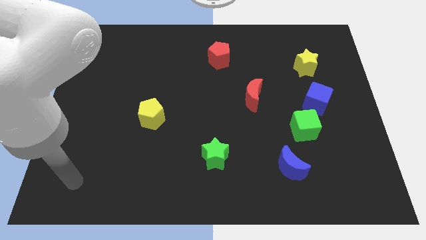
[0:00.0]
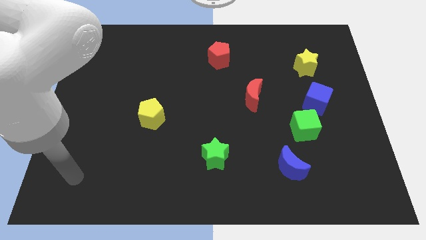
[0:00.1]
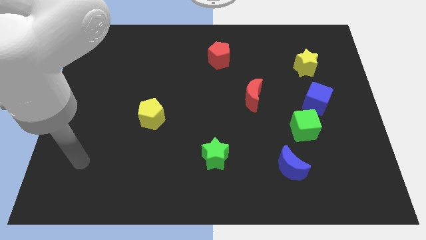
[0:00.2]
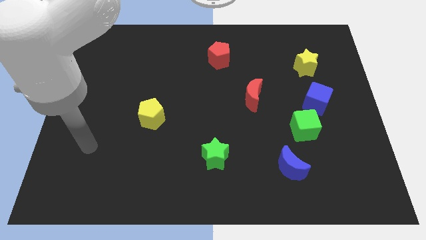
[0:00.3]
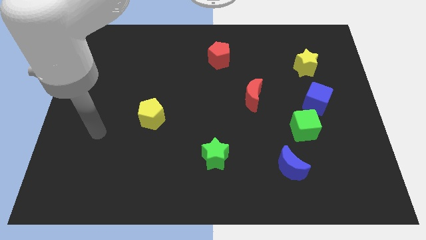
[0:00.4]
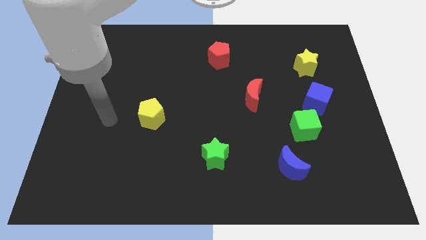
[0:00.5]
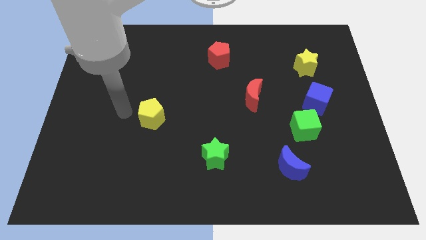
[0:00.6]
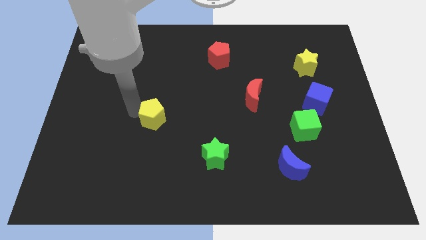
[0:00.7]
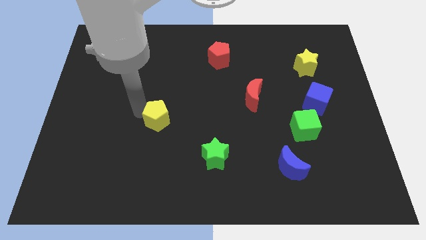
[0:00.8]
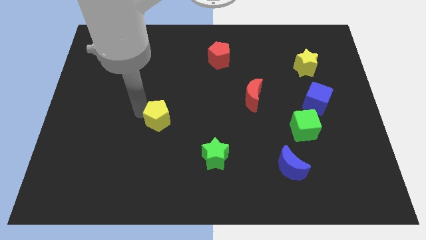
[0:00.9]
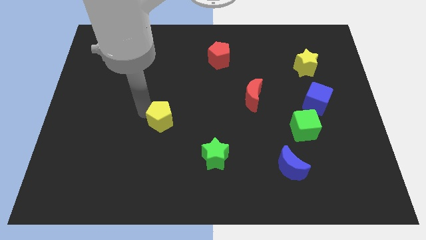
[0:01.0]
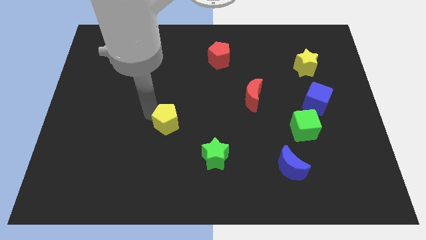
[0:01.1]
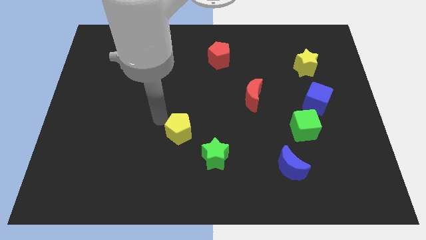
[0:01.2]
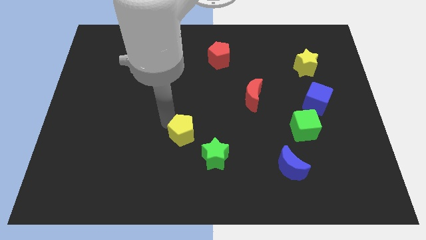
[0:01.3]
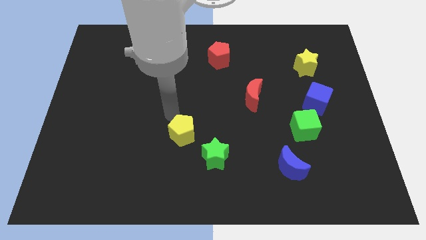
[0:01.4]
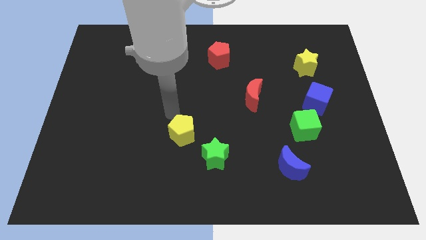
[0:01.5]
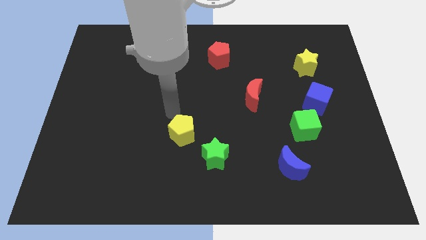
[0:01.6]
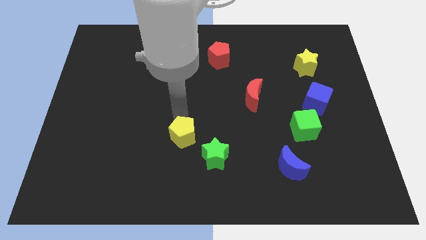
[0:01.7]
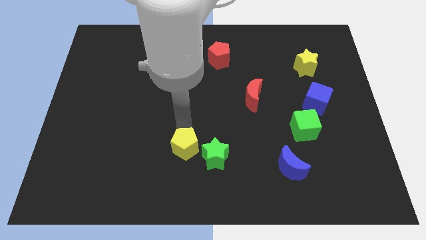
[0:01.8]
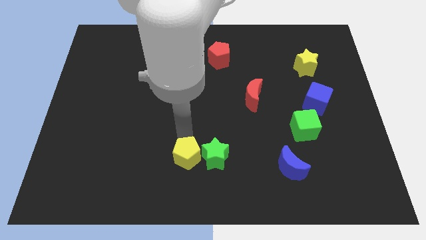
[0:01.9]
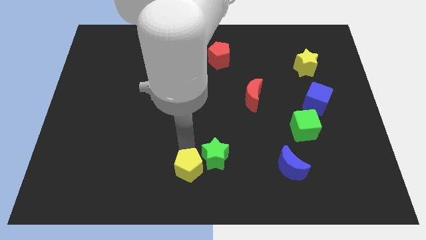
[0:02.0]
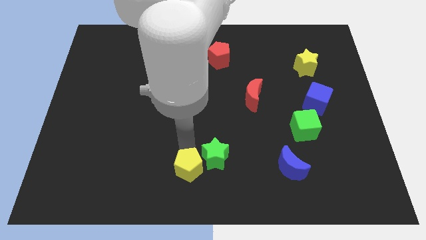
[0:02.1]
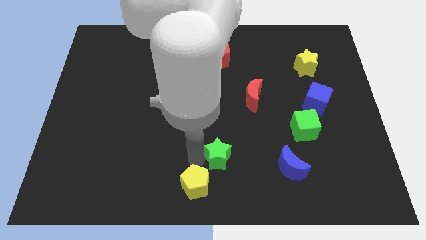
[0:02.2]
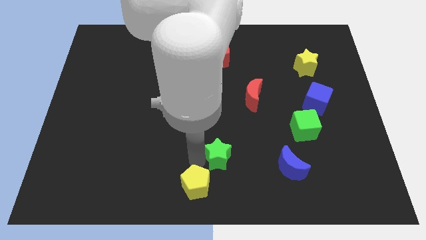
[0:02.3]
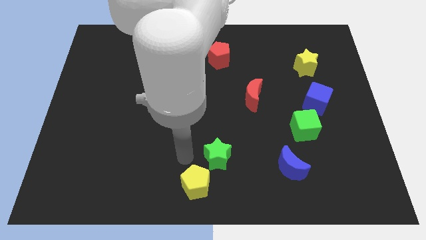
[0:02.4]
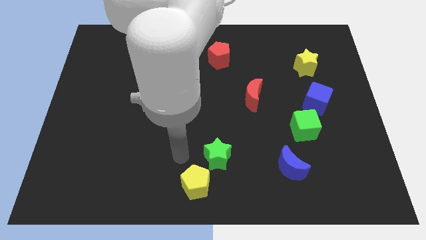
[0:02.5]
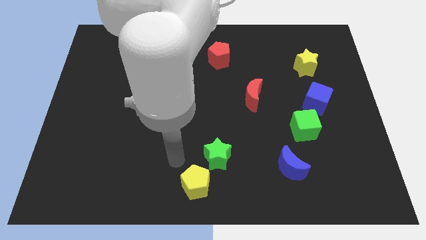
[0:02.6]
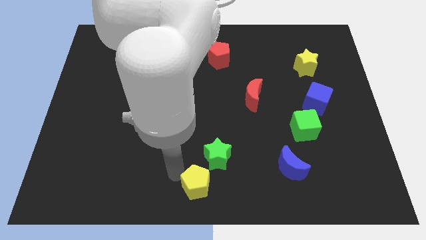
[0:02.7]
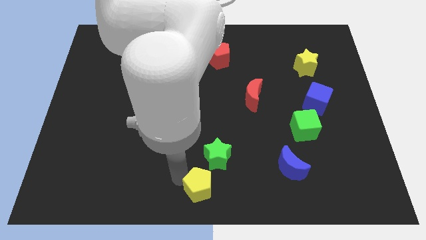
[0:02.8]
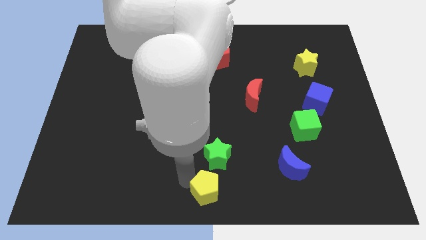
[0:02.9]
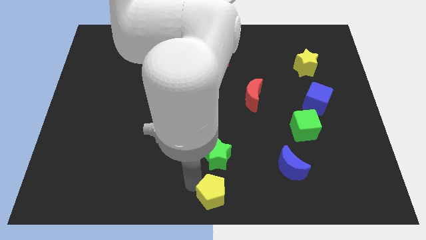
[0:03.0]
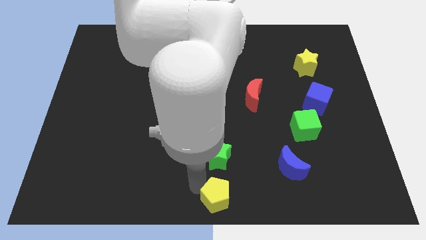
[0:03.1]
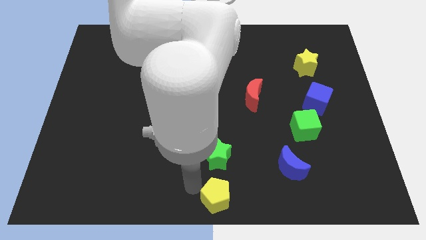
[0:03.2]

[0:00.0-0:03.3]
move the yellow pentagon to the bottom center

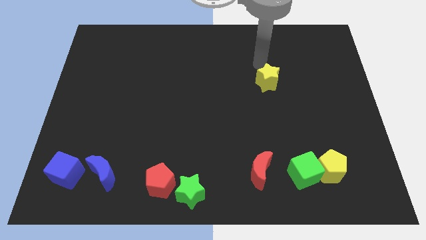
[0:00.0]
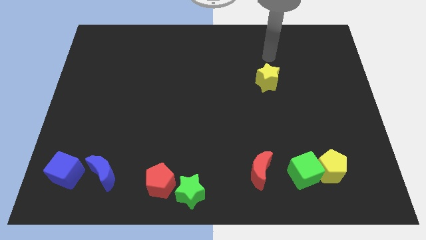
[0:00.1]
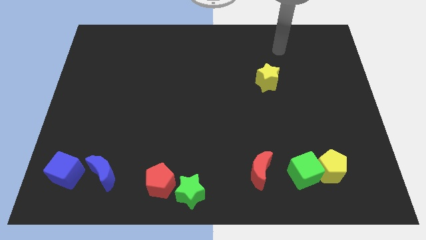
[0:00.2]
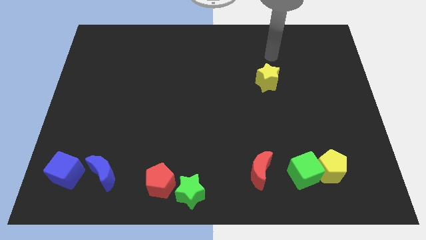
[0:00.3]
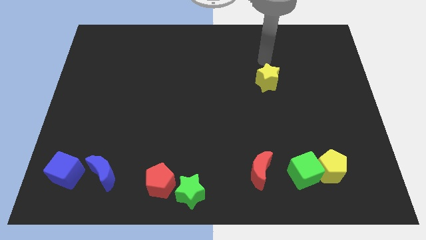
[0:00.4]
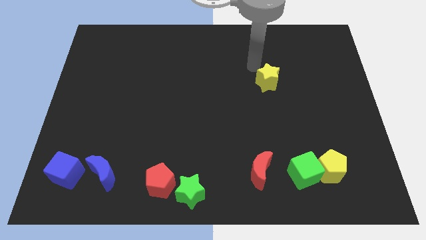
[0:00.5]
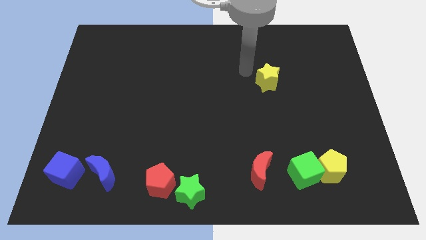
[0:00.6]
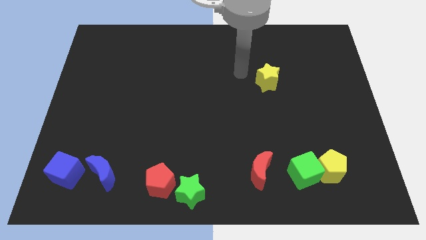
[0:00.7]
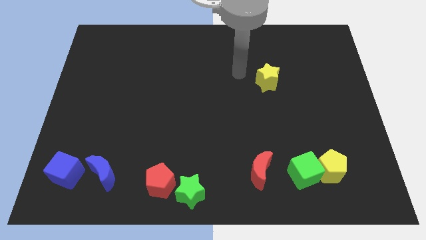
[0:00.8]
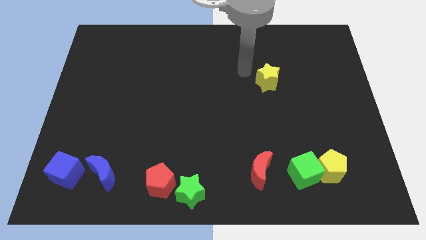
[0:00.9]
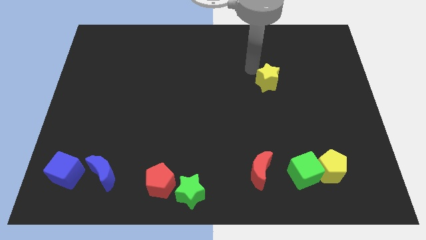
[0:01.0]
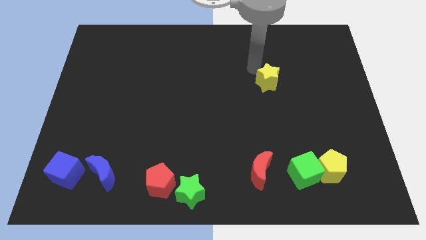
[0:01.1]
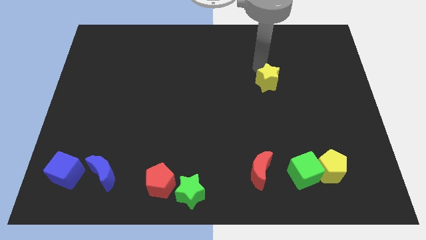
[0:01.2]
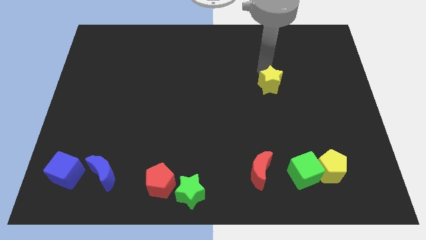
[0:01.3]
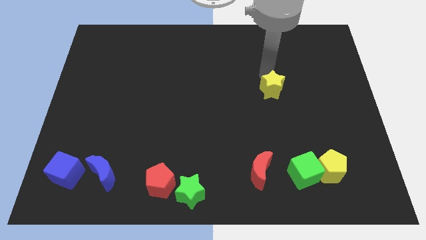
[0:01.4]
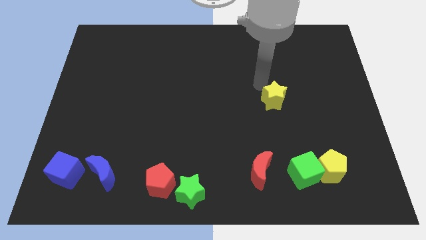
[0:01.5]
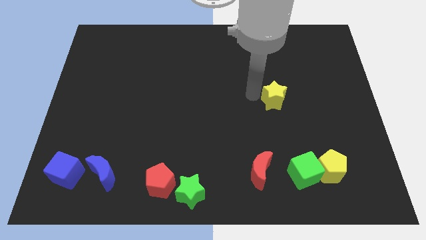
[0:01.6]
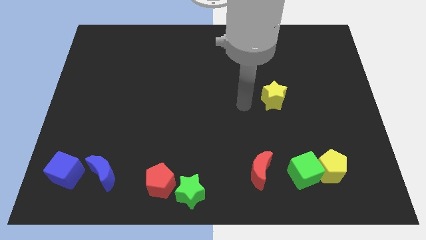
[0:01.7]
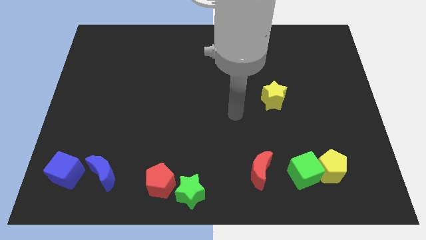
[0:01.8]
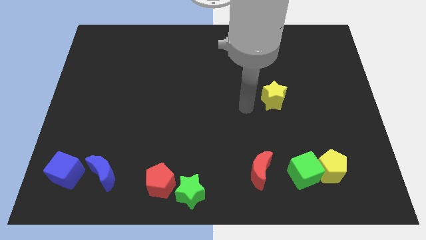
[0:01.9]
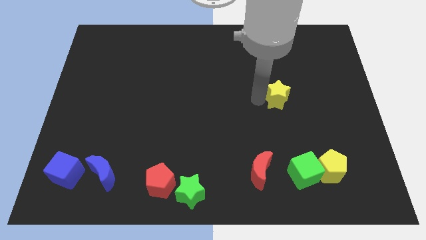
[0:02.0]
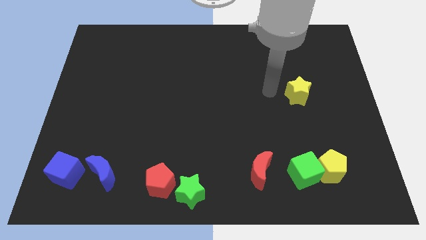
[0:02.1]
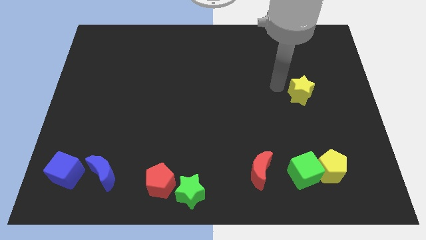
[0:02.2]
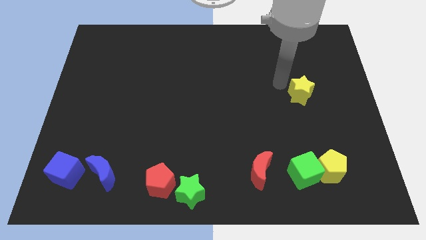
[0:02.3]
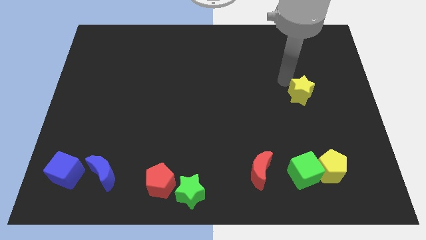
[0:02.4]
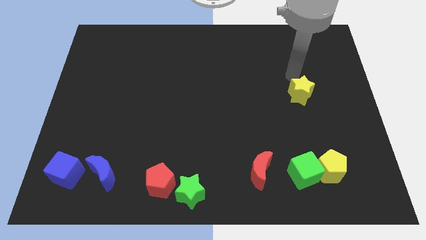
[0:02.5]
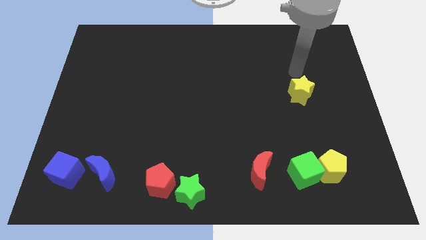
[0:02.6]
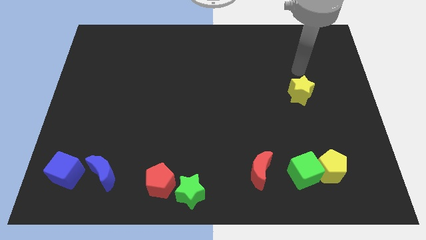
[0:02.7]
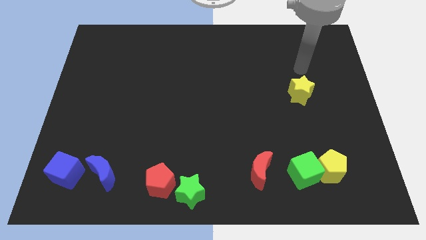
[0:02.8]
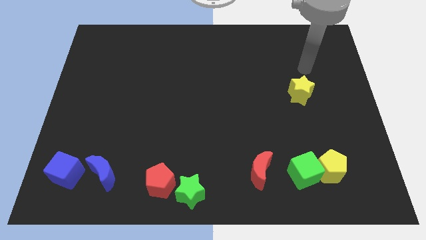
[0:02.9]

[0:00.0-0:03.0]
place the yellow star above the green cube

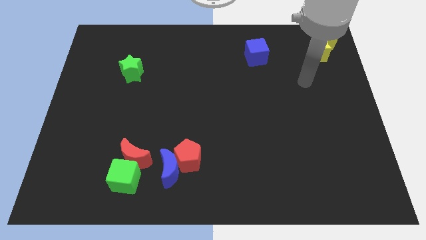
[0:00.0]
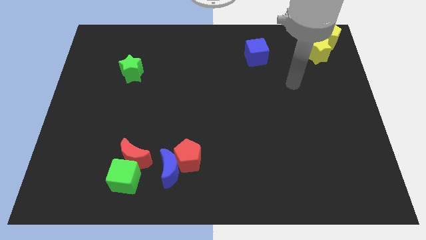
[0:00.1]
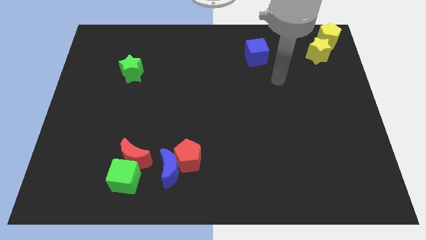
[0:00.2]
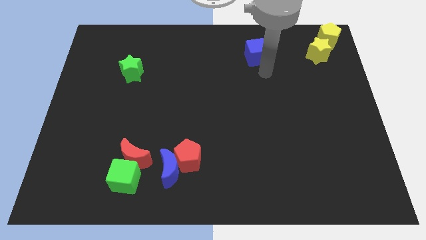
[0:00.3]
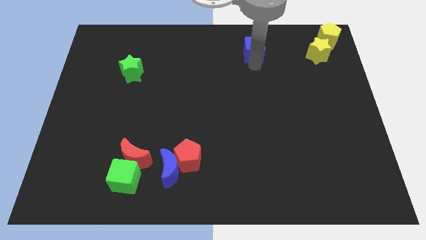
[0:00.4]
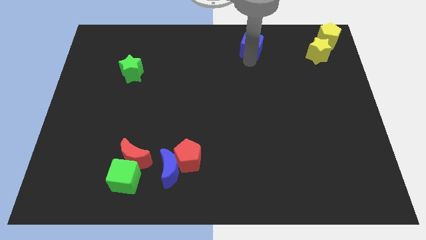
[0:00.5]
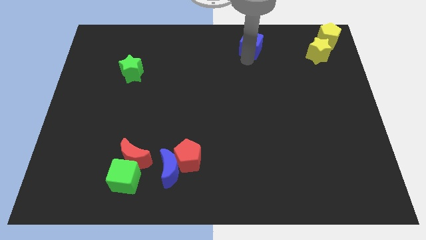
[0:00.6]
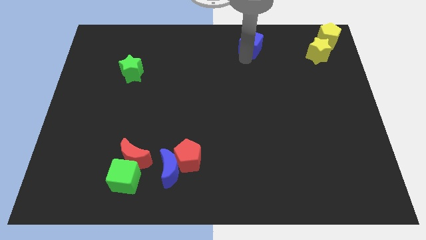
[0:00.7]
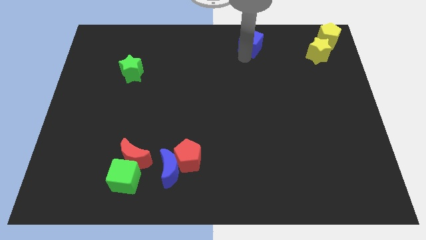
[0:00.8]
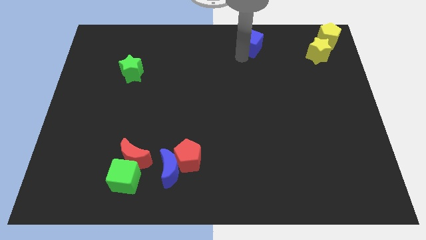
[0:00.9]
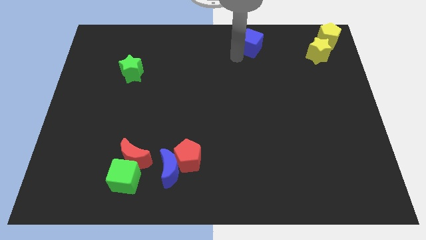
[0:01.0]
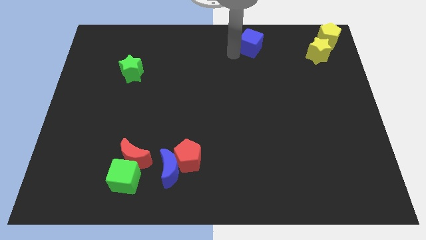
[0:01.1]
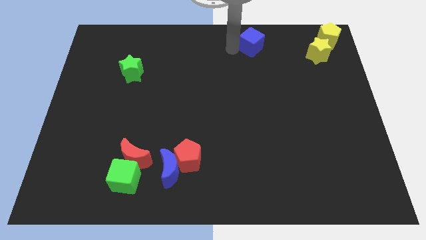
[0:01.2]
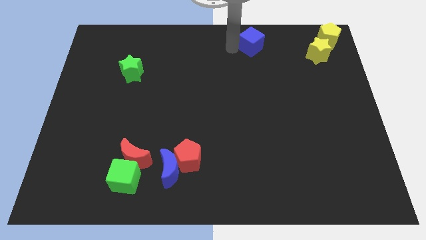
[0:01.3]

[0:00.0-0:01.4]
slightly move the blue cube to the right of the board

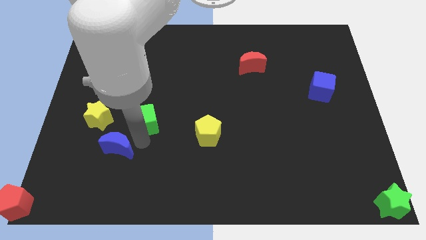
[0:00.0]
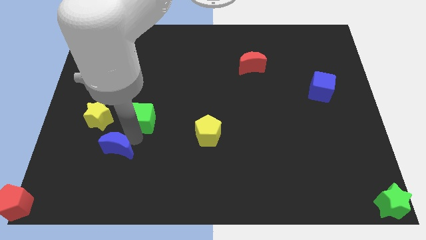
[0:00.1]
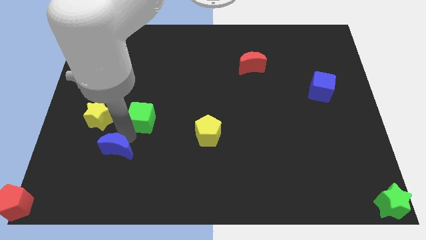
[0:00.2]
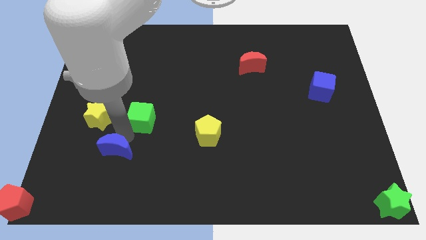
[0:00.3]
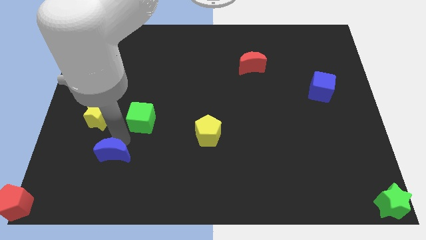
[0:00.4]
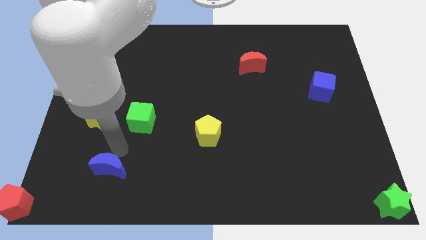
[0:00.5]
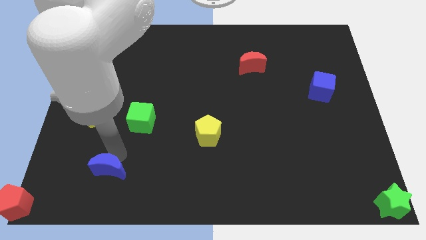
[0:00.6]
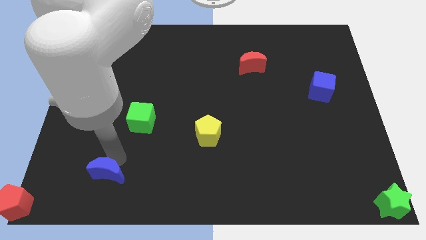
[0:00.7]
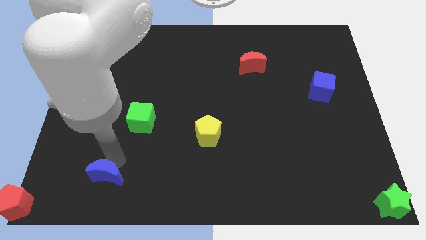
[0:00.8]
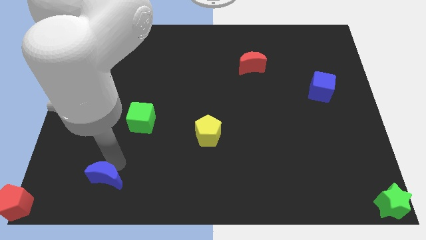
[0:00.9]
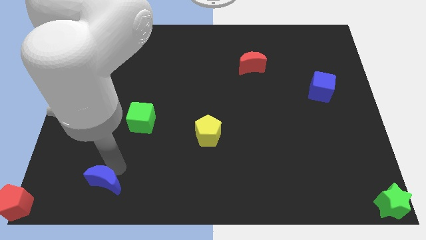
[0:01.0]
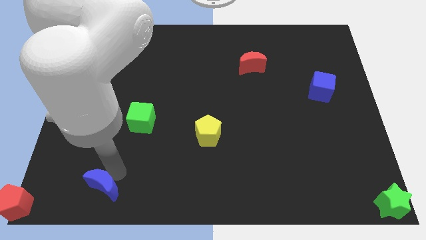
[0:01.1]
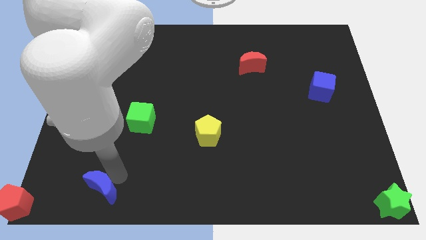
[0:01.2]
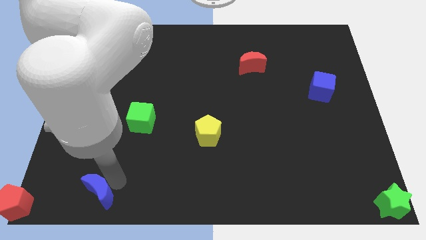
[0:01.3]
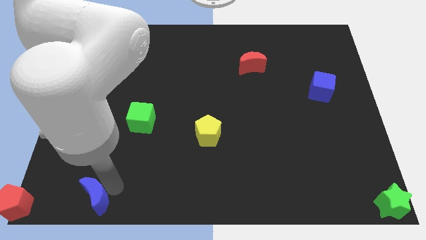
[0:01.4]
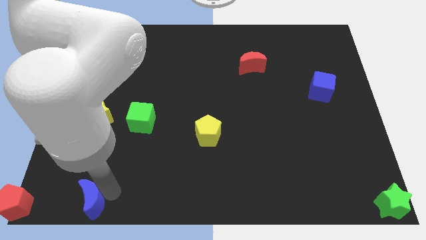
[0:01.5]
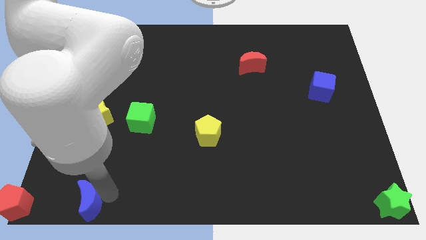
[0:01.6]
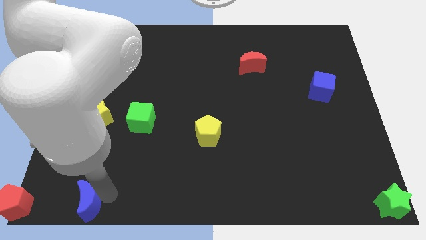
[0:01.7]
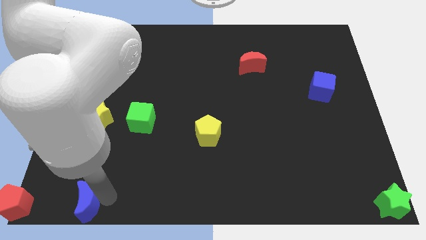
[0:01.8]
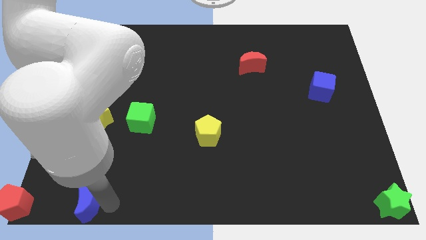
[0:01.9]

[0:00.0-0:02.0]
push blue moon towards bottom left side of the board
